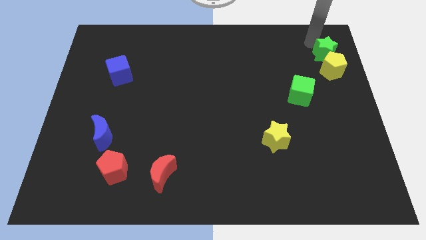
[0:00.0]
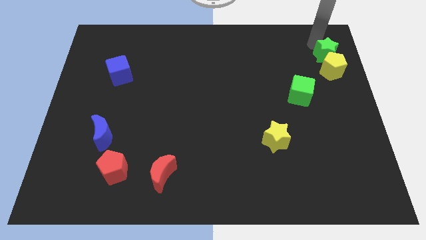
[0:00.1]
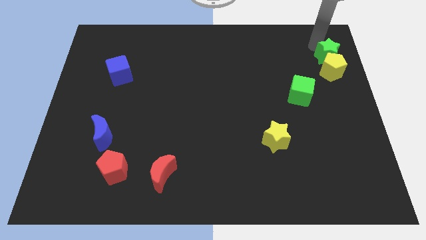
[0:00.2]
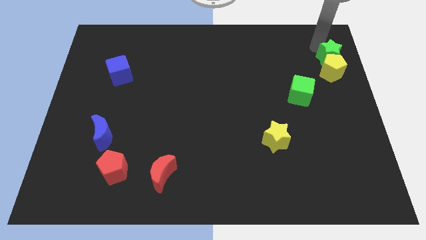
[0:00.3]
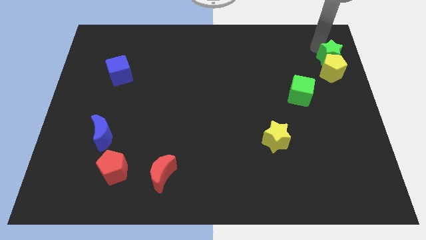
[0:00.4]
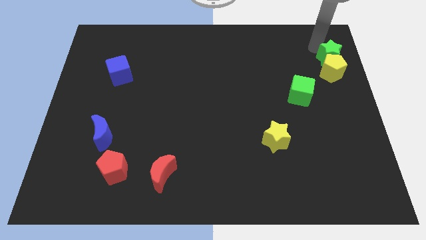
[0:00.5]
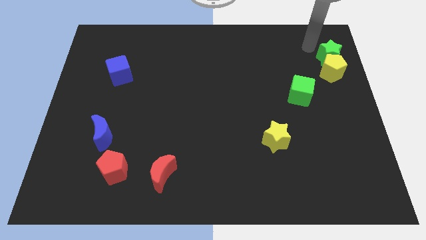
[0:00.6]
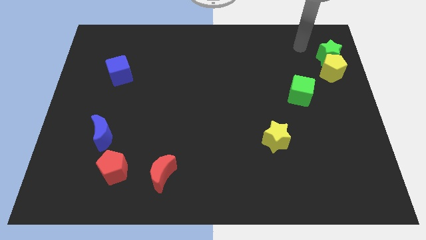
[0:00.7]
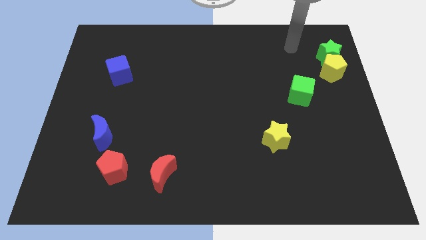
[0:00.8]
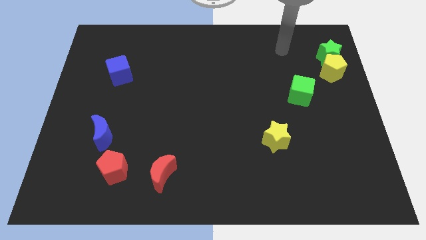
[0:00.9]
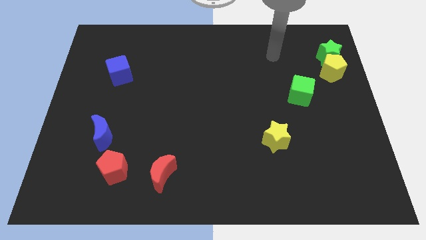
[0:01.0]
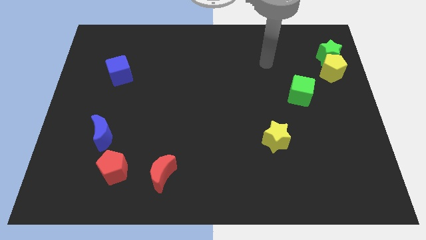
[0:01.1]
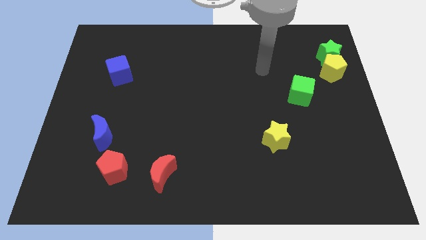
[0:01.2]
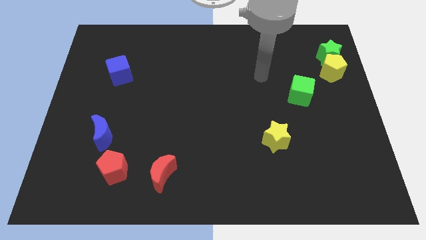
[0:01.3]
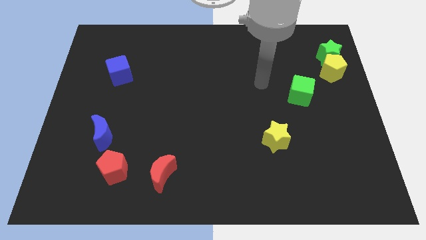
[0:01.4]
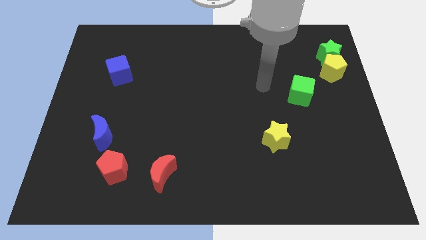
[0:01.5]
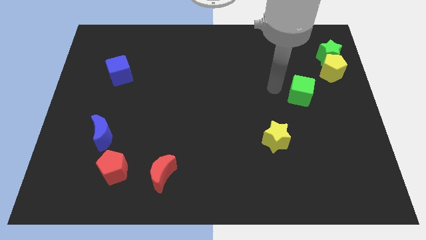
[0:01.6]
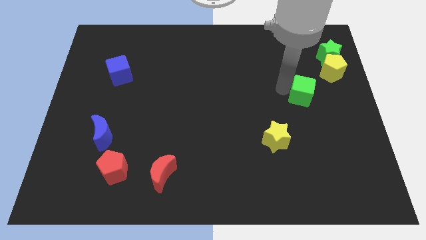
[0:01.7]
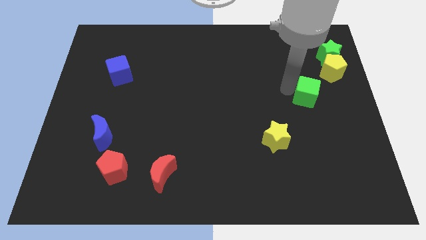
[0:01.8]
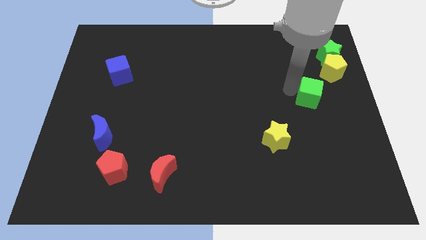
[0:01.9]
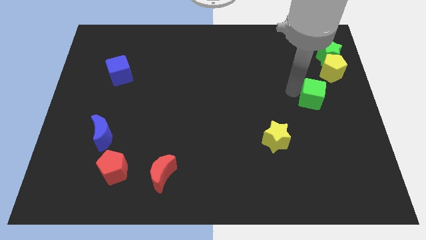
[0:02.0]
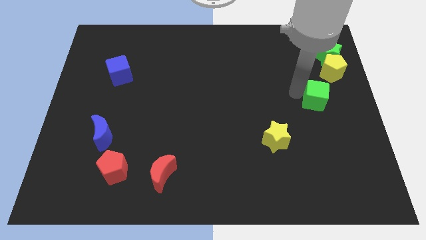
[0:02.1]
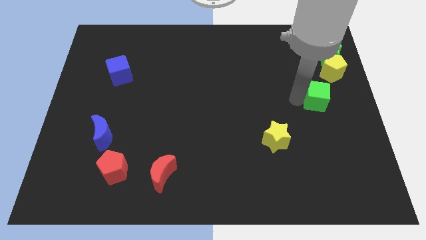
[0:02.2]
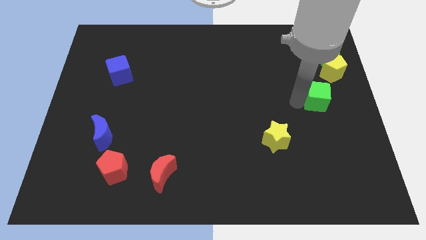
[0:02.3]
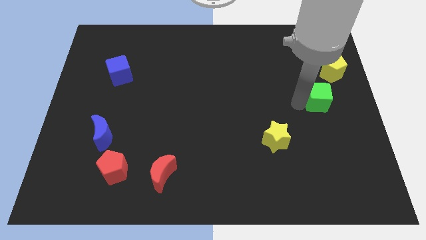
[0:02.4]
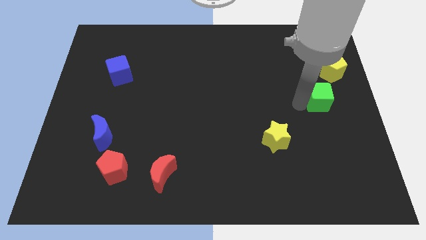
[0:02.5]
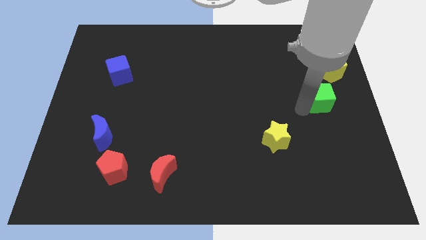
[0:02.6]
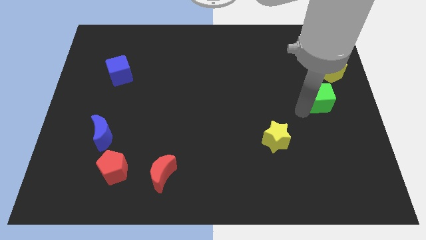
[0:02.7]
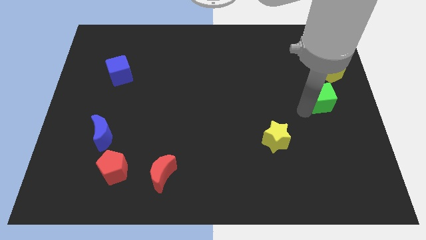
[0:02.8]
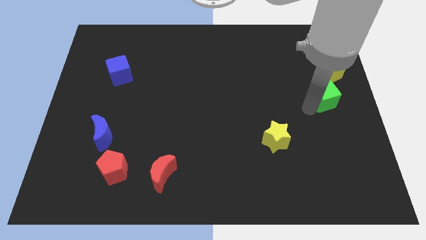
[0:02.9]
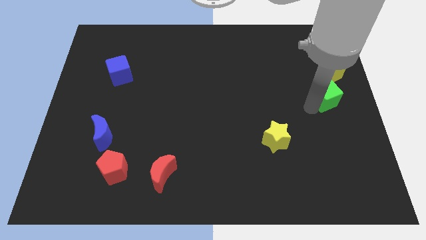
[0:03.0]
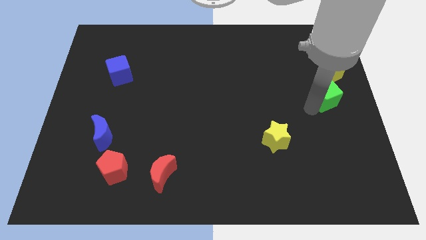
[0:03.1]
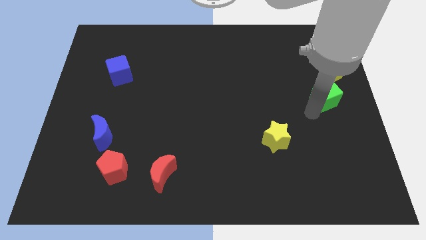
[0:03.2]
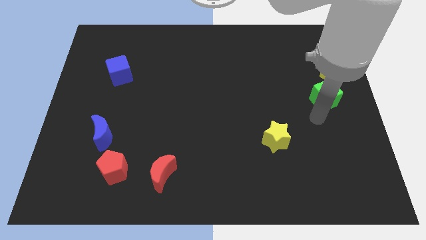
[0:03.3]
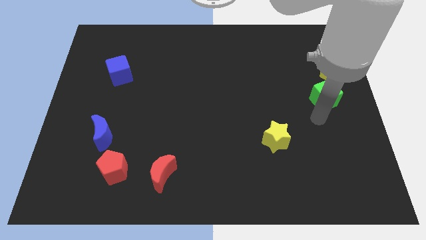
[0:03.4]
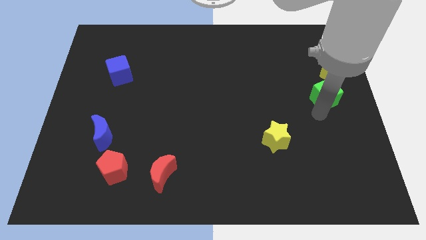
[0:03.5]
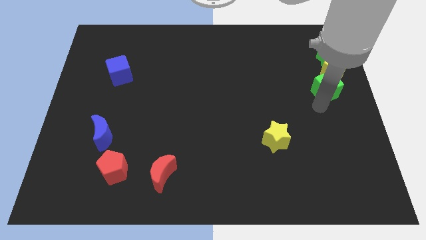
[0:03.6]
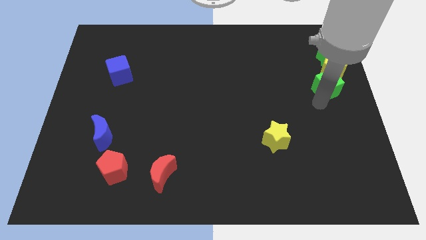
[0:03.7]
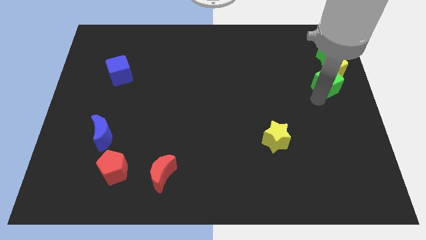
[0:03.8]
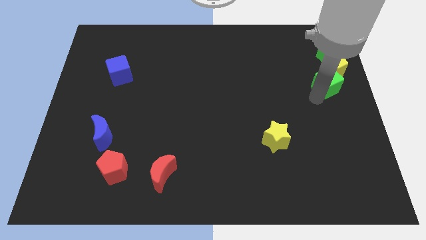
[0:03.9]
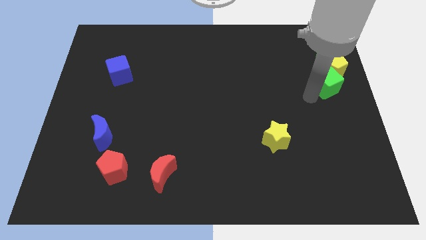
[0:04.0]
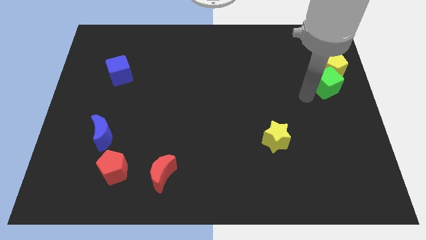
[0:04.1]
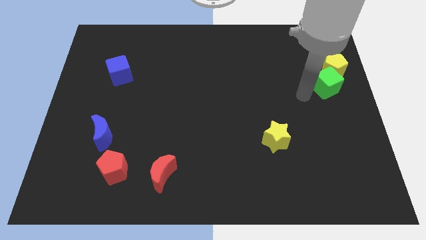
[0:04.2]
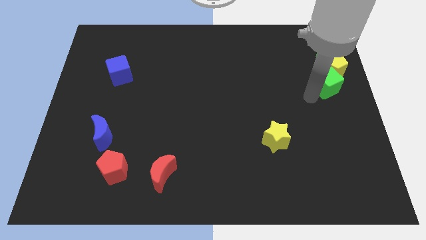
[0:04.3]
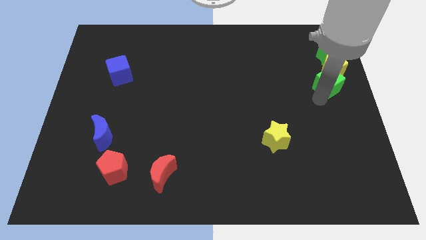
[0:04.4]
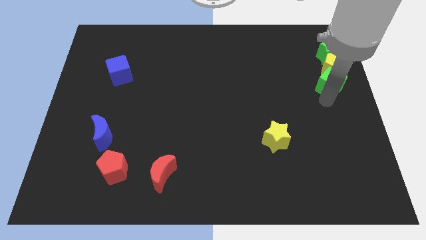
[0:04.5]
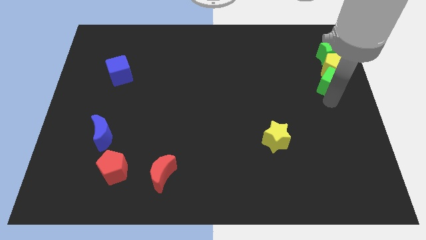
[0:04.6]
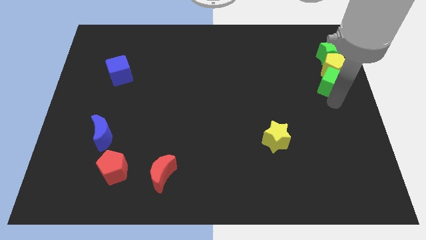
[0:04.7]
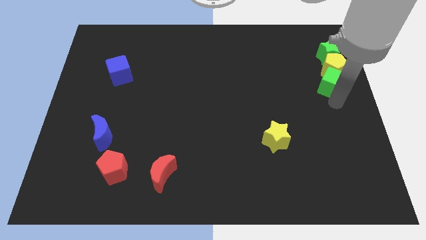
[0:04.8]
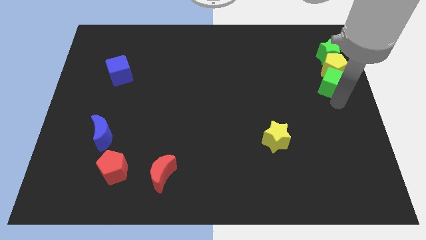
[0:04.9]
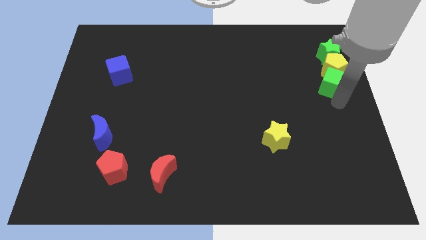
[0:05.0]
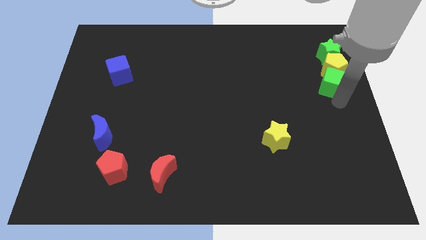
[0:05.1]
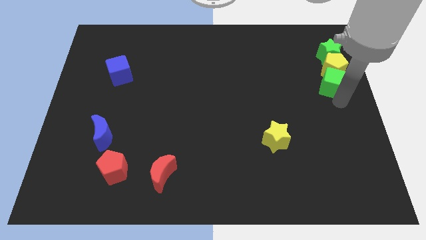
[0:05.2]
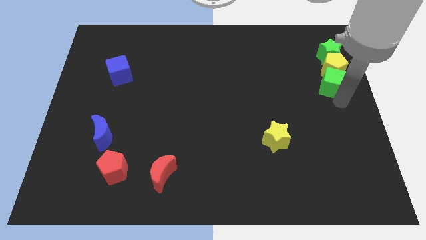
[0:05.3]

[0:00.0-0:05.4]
place the green cube below to the yellow pentagon

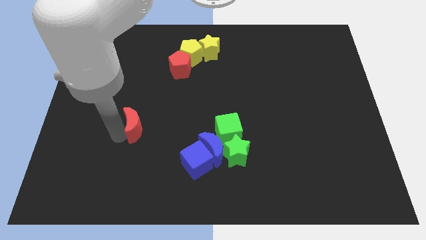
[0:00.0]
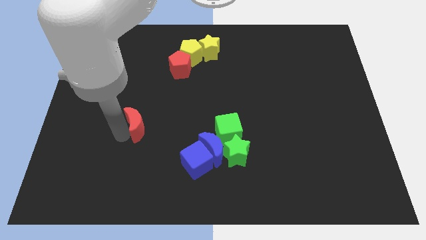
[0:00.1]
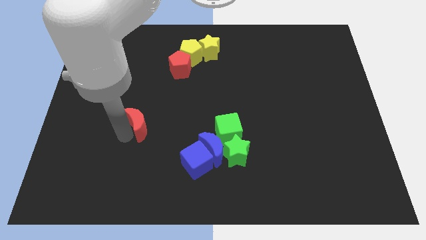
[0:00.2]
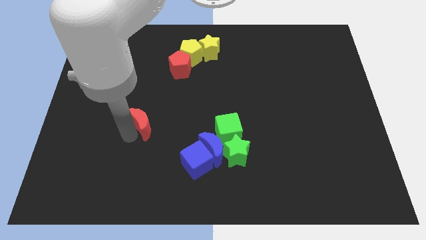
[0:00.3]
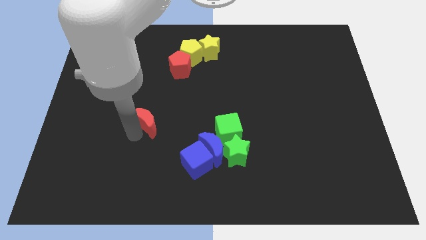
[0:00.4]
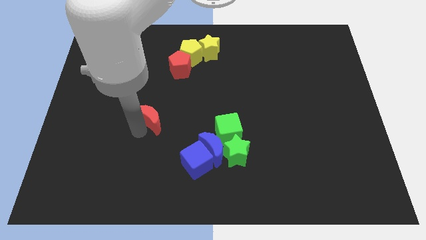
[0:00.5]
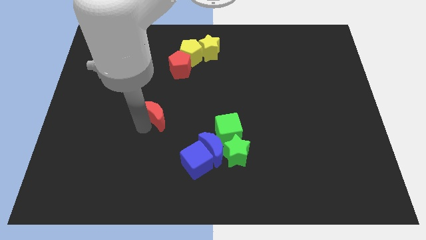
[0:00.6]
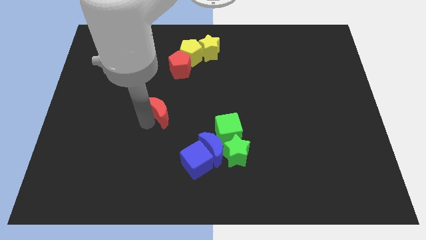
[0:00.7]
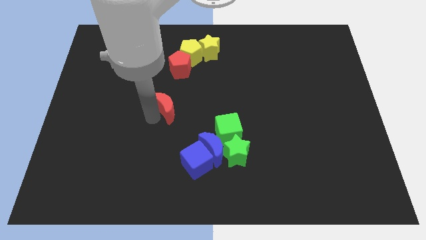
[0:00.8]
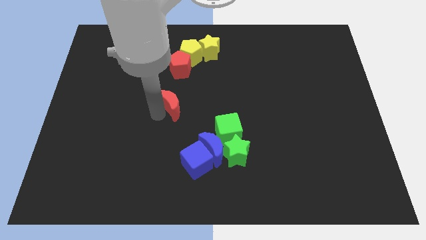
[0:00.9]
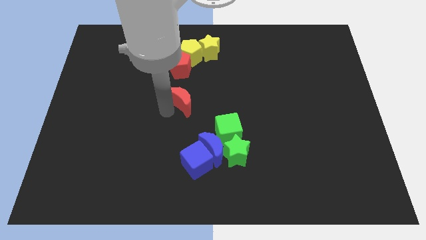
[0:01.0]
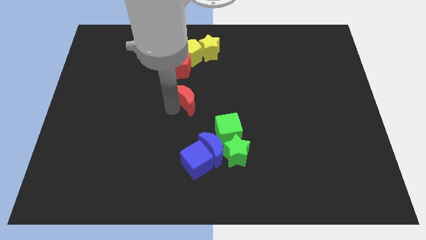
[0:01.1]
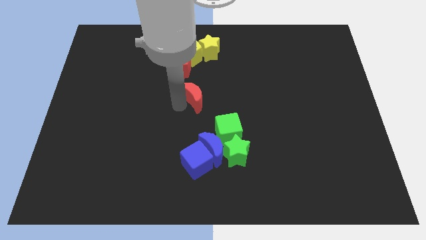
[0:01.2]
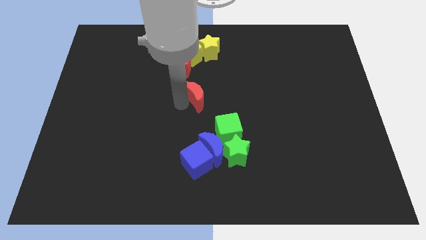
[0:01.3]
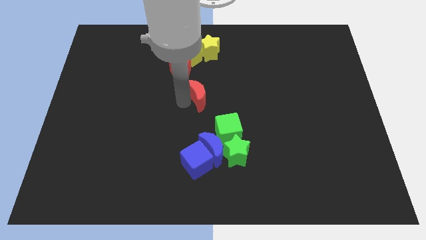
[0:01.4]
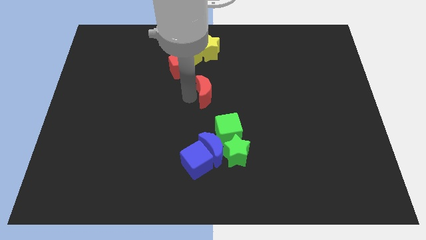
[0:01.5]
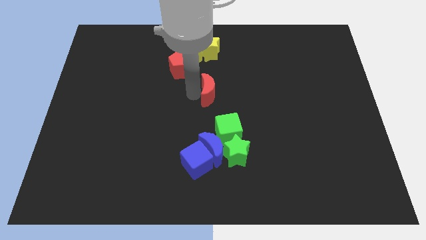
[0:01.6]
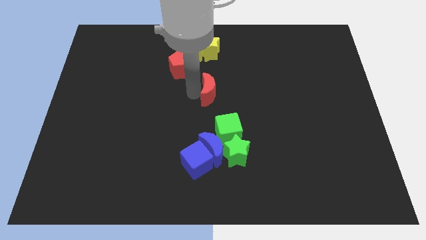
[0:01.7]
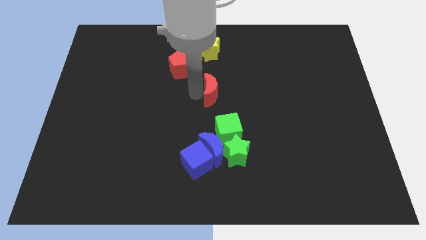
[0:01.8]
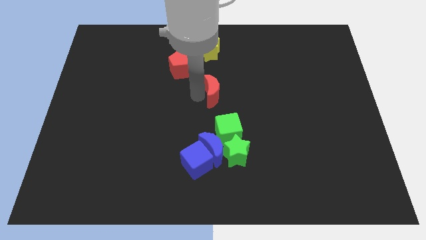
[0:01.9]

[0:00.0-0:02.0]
move the red crescent parallel to the top of the green cube

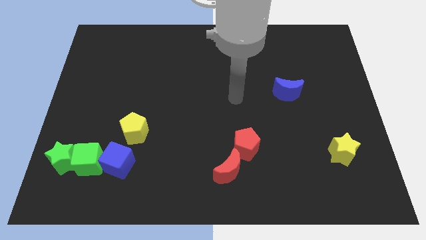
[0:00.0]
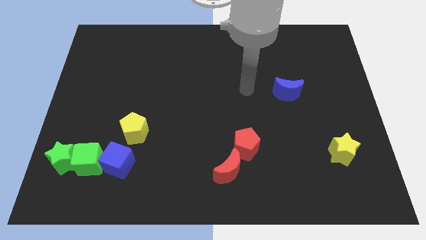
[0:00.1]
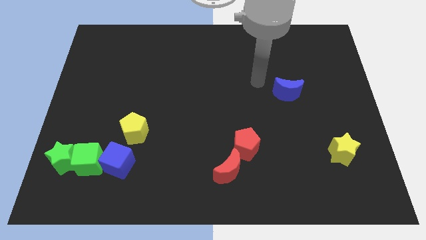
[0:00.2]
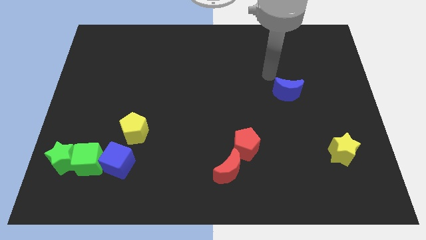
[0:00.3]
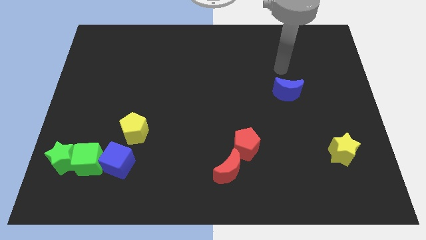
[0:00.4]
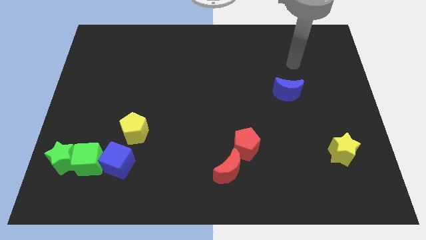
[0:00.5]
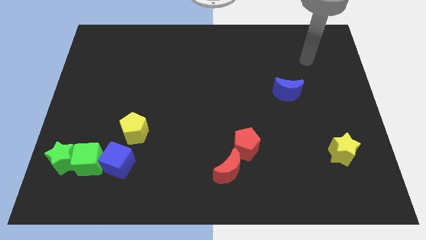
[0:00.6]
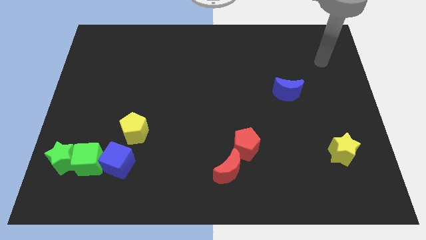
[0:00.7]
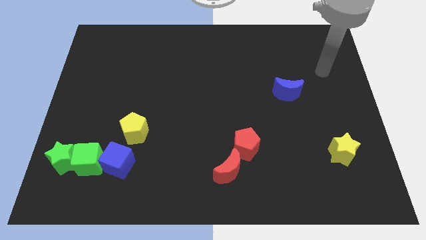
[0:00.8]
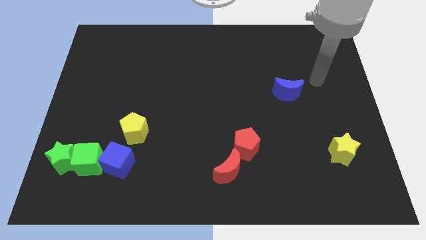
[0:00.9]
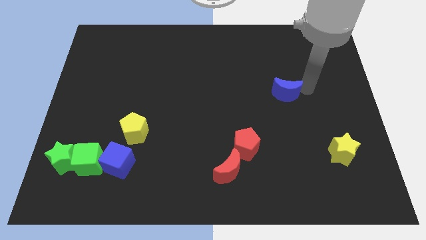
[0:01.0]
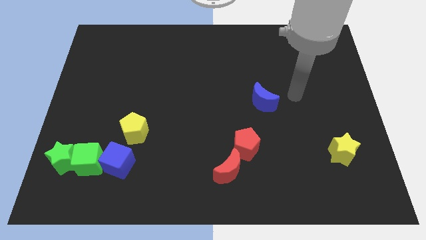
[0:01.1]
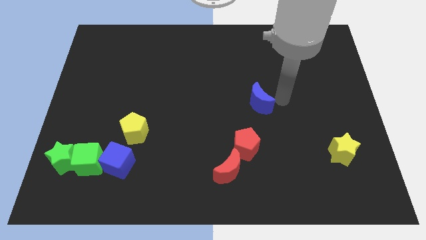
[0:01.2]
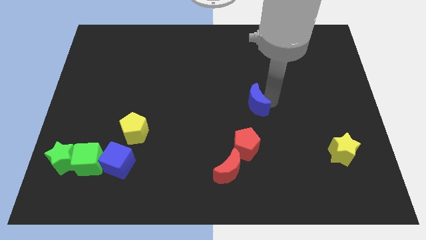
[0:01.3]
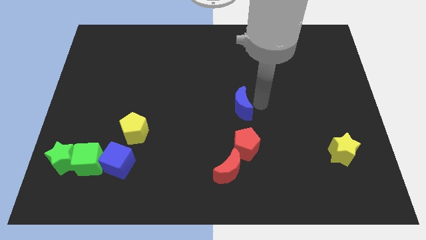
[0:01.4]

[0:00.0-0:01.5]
push the blue crescent to the top right of the red pentagon
